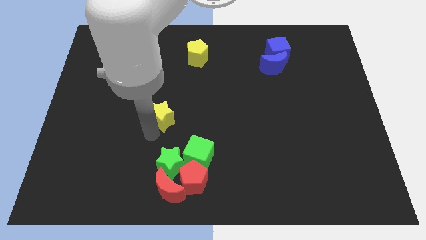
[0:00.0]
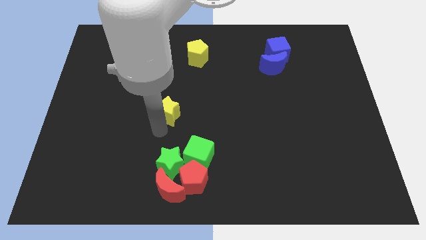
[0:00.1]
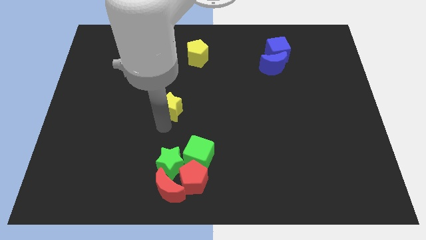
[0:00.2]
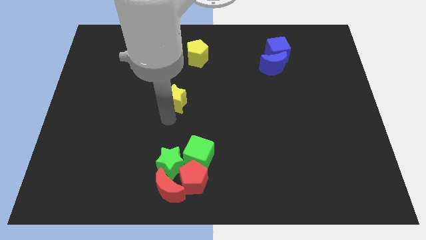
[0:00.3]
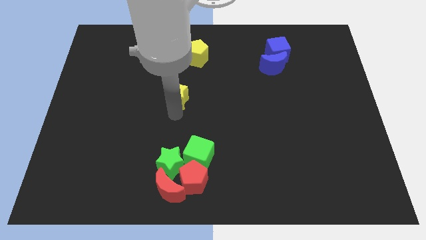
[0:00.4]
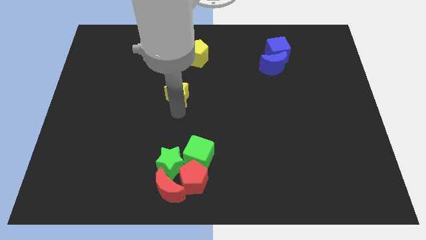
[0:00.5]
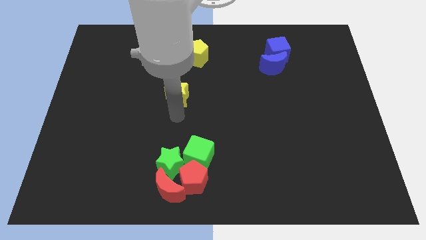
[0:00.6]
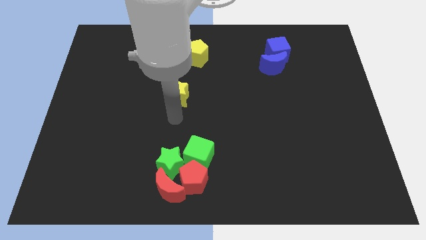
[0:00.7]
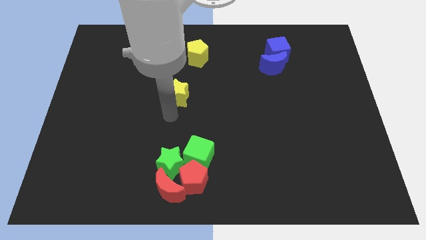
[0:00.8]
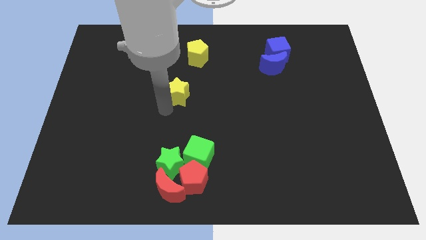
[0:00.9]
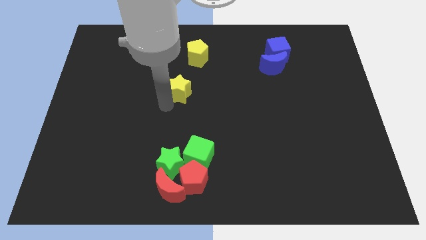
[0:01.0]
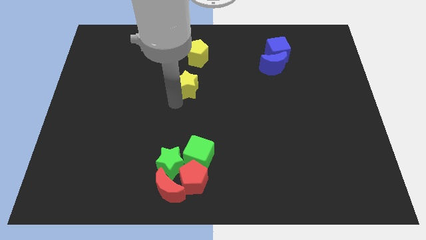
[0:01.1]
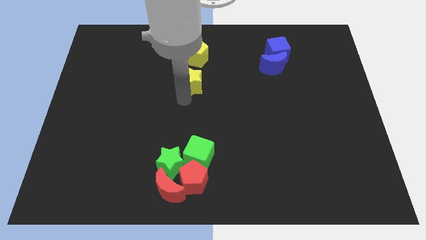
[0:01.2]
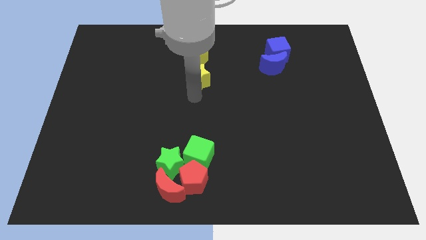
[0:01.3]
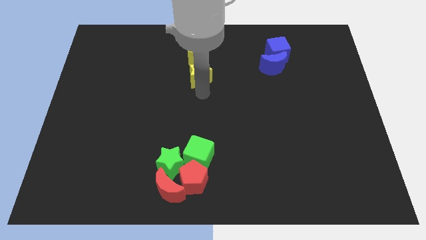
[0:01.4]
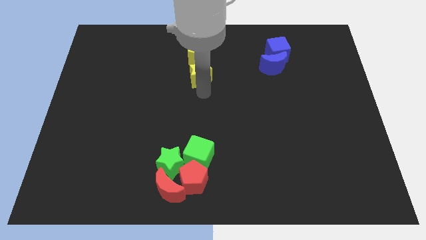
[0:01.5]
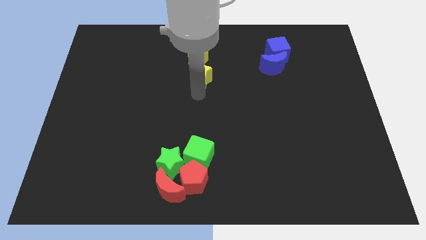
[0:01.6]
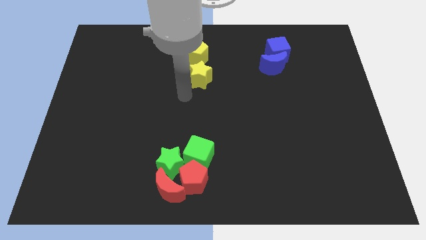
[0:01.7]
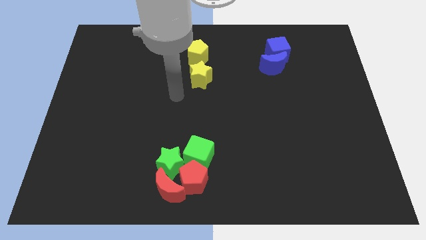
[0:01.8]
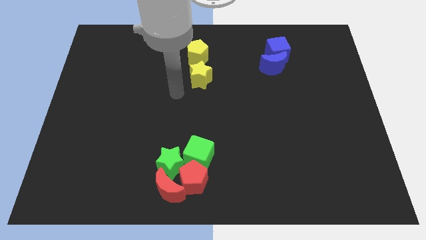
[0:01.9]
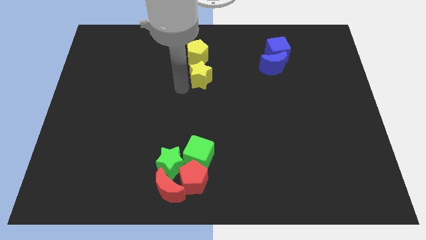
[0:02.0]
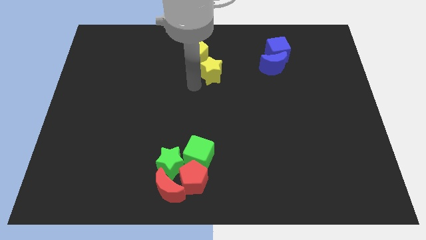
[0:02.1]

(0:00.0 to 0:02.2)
move yellow star below yellow pentagon

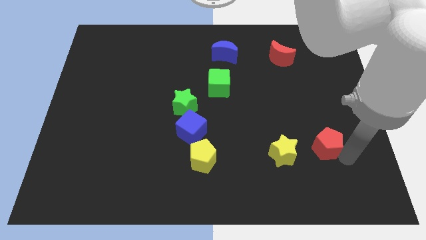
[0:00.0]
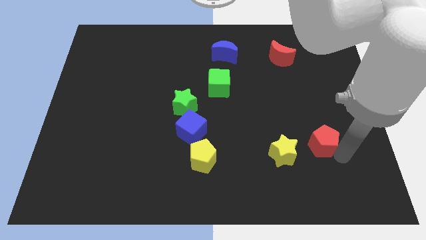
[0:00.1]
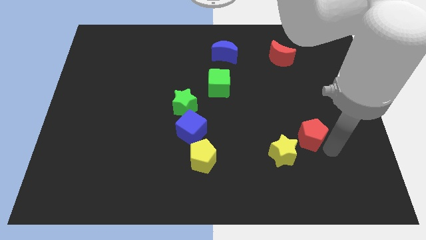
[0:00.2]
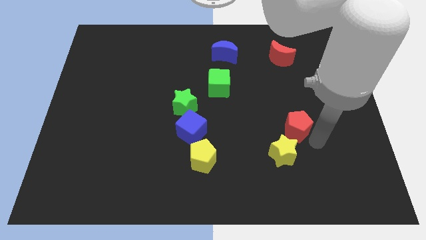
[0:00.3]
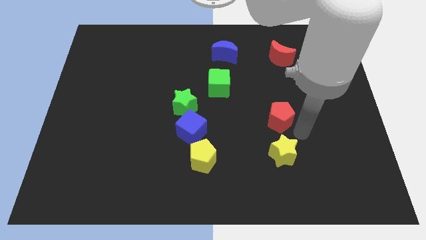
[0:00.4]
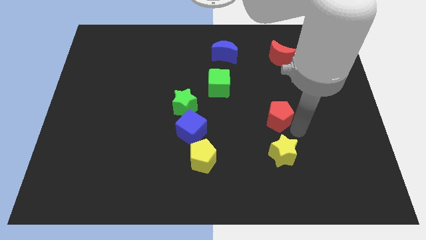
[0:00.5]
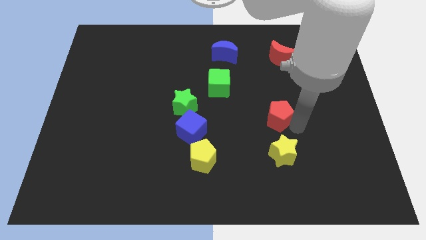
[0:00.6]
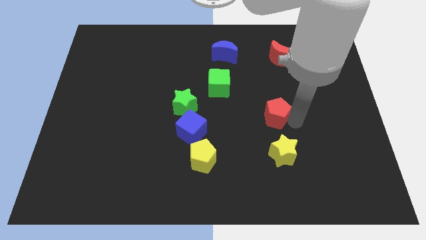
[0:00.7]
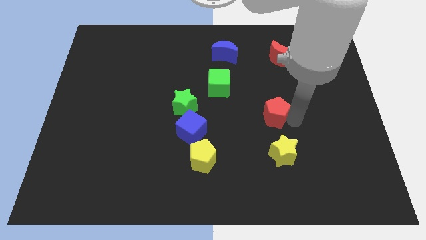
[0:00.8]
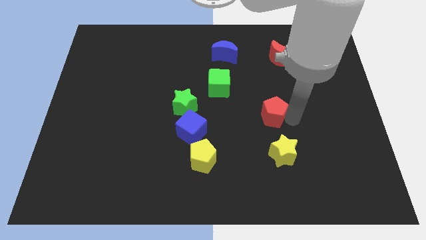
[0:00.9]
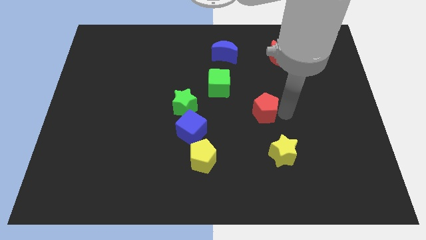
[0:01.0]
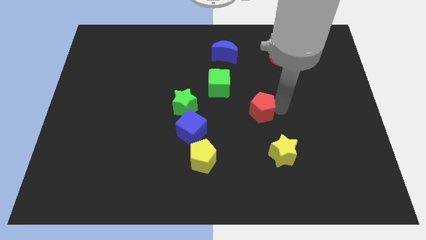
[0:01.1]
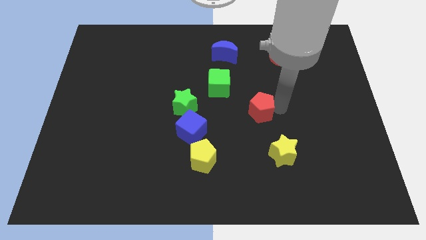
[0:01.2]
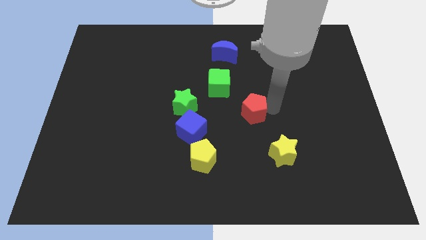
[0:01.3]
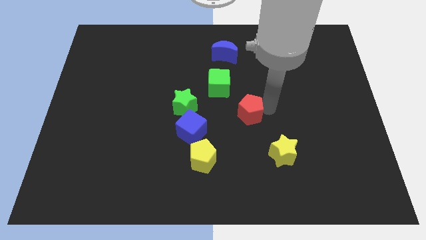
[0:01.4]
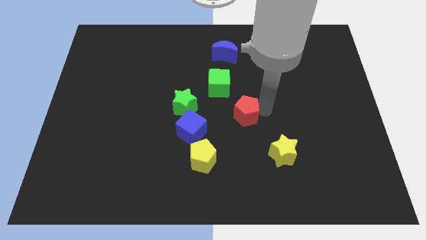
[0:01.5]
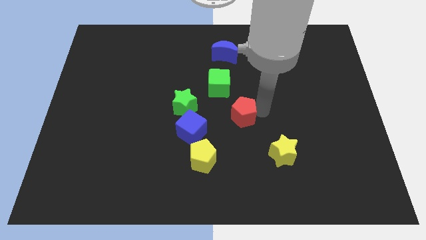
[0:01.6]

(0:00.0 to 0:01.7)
place the red pentagon towards the bottom right side of the green cube

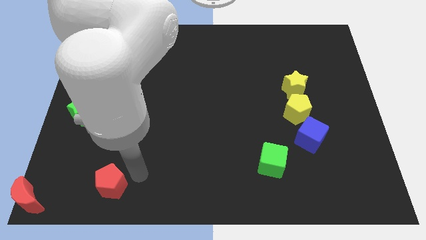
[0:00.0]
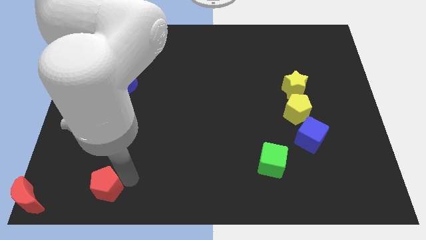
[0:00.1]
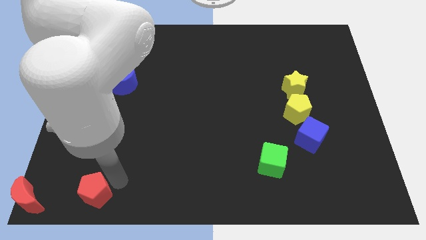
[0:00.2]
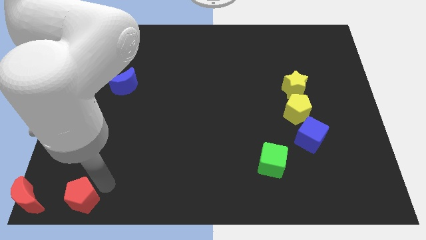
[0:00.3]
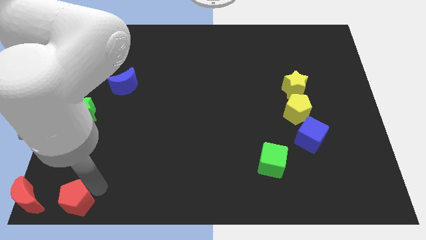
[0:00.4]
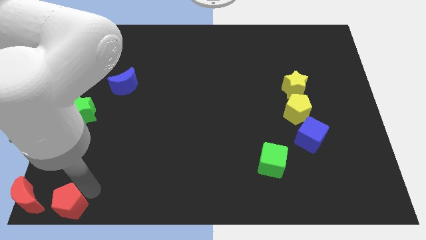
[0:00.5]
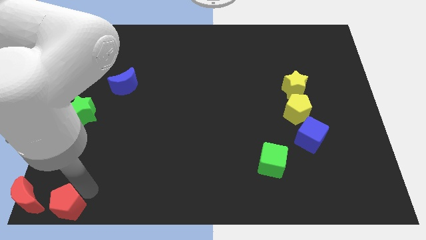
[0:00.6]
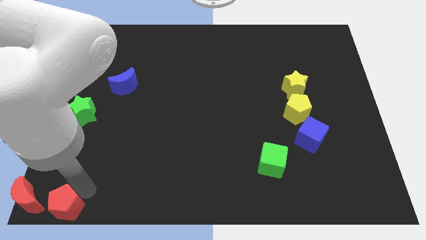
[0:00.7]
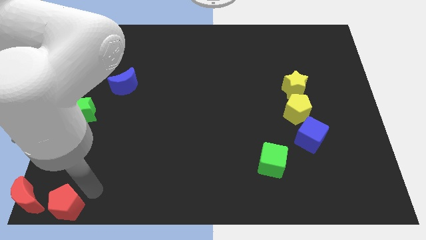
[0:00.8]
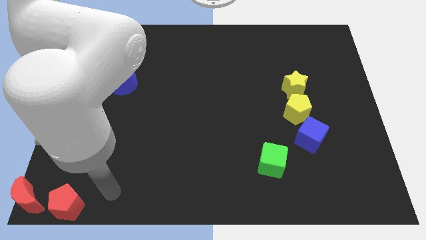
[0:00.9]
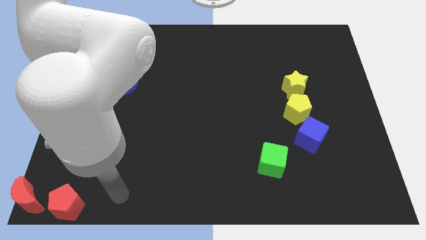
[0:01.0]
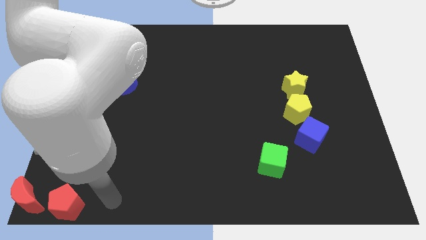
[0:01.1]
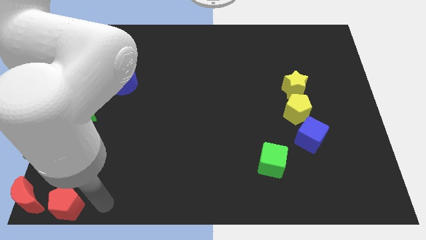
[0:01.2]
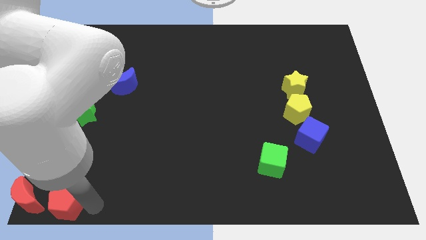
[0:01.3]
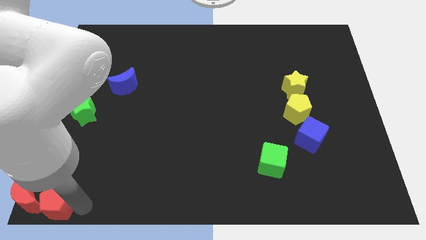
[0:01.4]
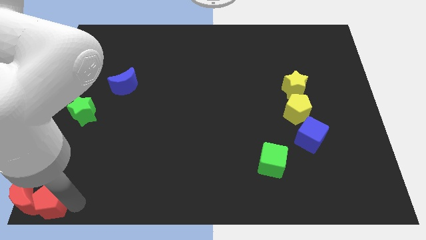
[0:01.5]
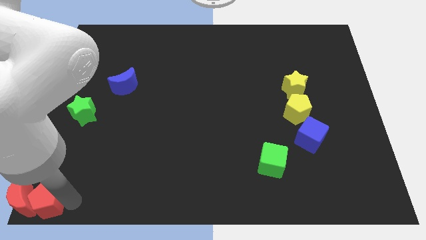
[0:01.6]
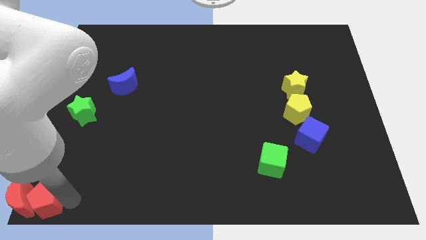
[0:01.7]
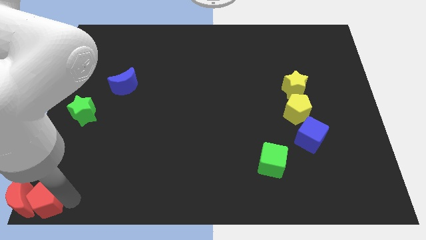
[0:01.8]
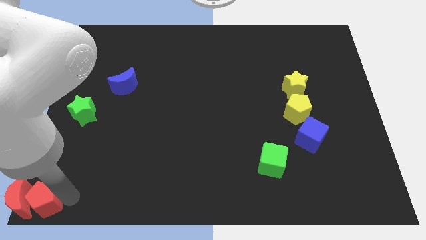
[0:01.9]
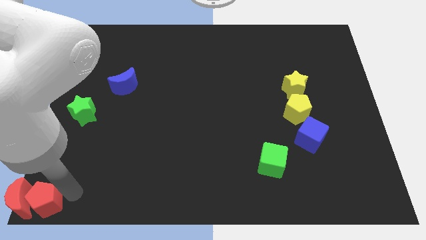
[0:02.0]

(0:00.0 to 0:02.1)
move the red pentagon into the red crescent in the bottom left

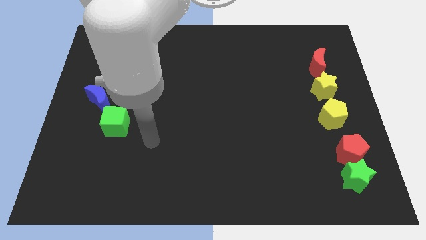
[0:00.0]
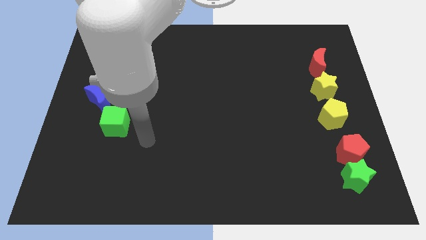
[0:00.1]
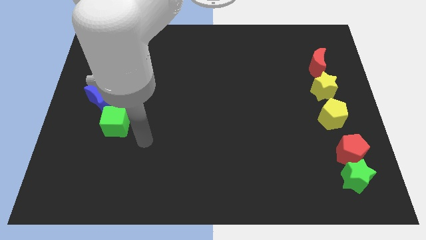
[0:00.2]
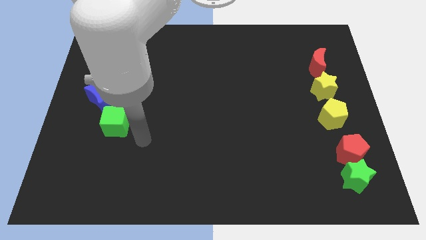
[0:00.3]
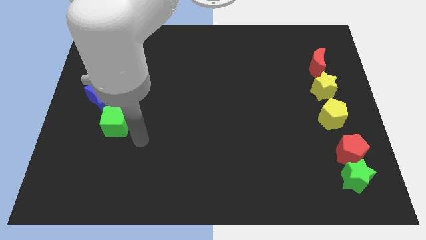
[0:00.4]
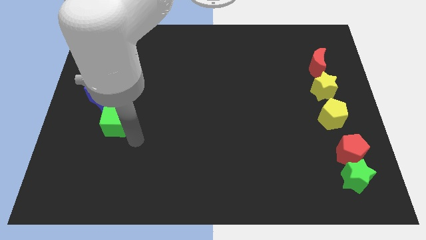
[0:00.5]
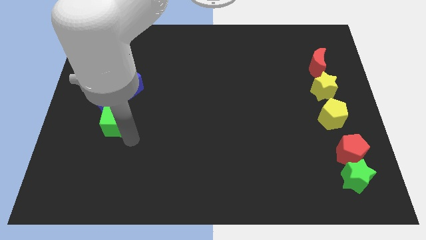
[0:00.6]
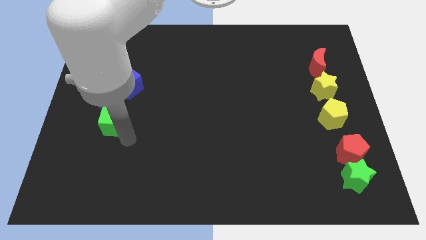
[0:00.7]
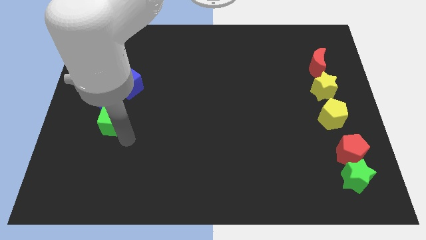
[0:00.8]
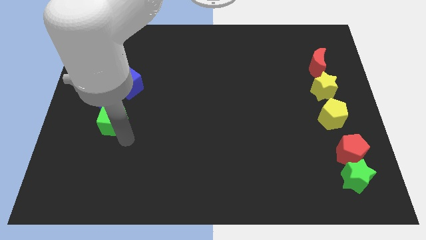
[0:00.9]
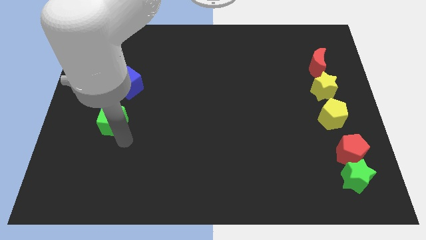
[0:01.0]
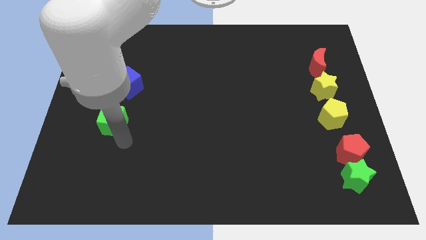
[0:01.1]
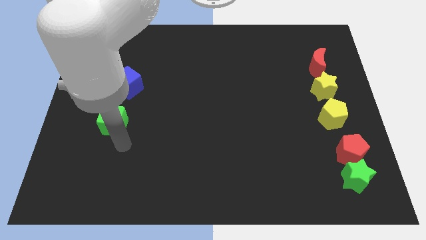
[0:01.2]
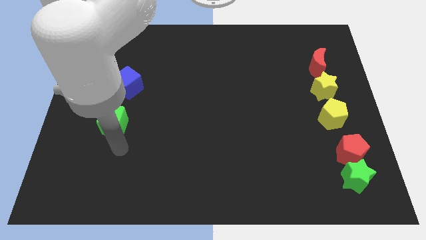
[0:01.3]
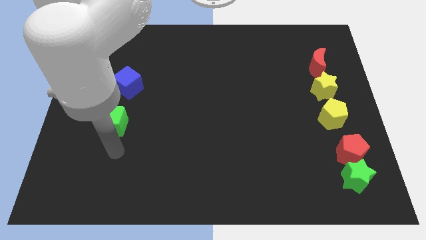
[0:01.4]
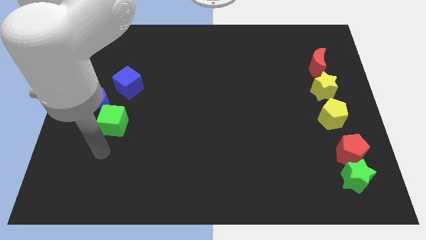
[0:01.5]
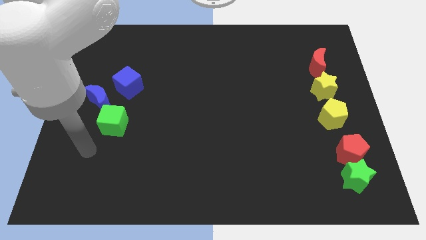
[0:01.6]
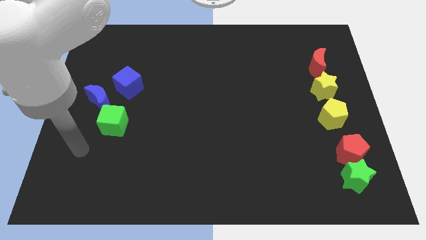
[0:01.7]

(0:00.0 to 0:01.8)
go and touch the right side of the green cube

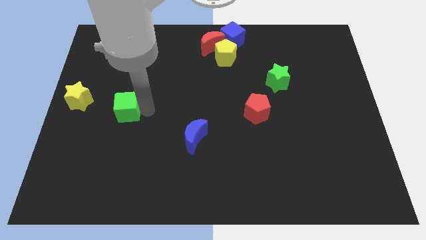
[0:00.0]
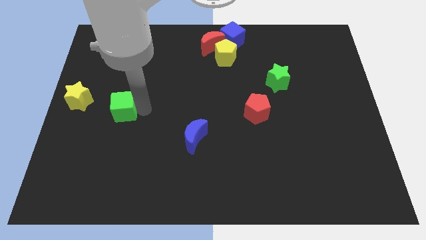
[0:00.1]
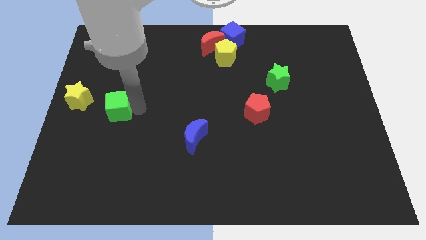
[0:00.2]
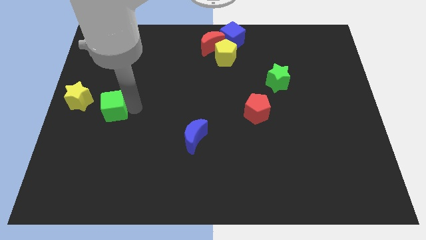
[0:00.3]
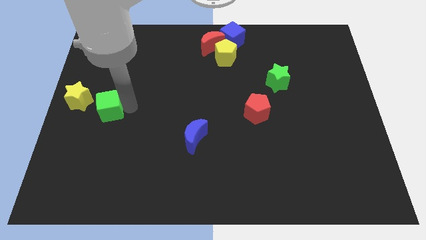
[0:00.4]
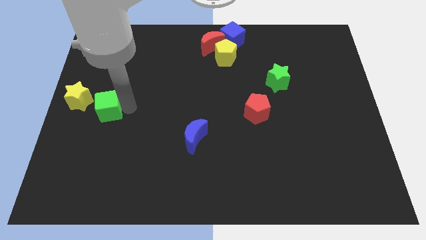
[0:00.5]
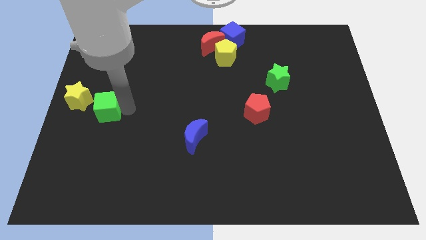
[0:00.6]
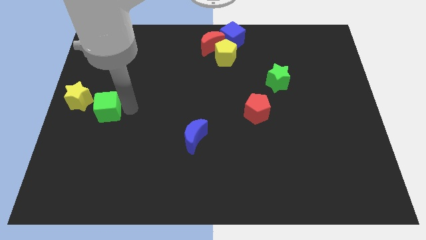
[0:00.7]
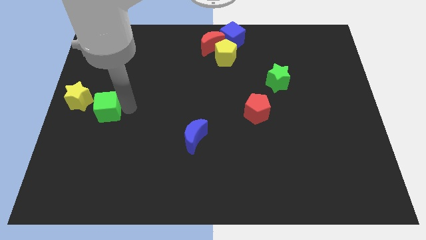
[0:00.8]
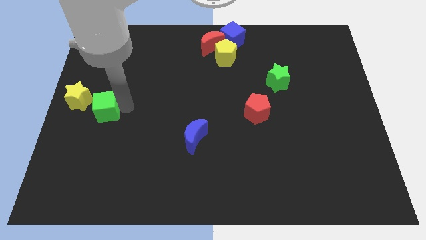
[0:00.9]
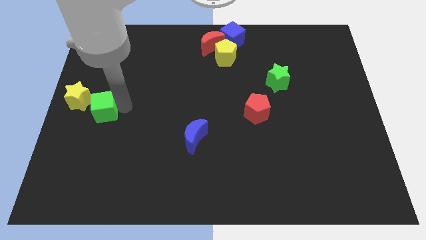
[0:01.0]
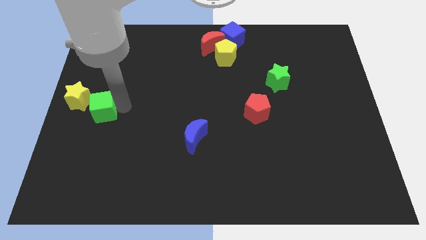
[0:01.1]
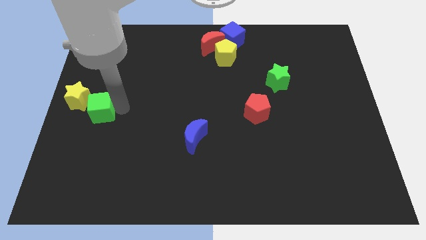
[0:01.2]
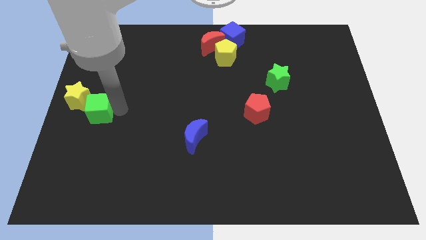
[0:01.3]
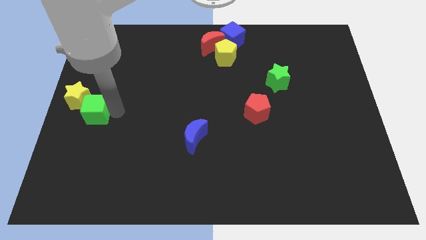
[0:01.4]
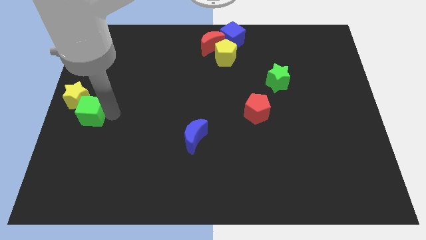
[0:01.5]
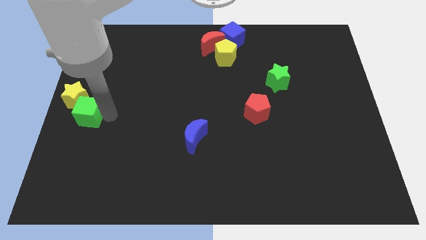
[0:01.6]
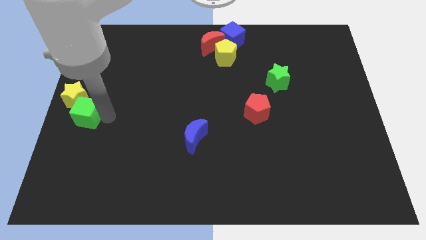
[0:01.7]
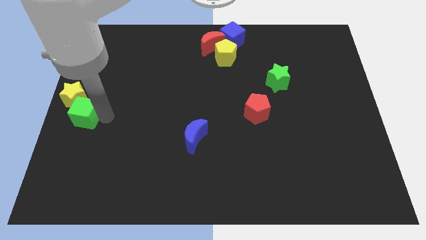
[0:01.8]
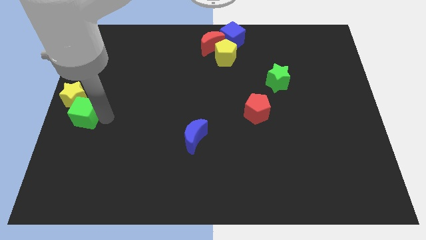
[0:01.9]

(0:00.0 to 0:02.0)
place the green cube to the bottom right side of the yellow star
